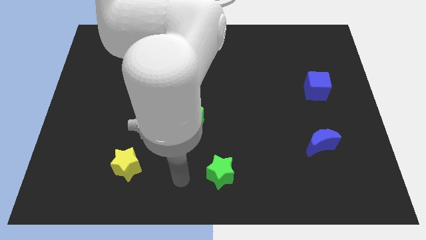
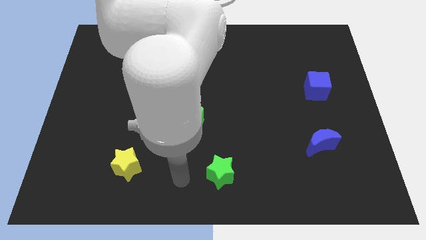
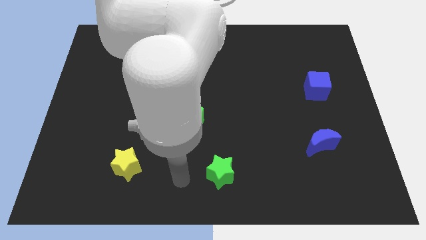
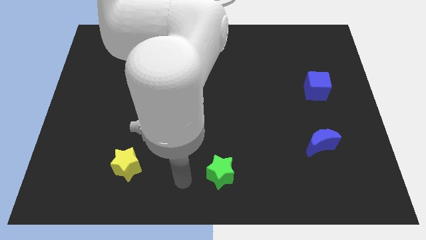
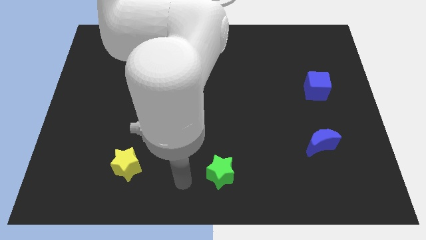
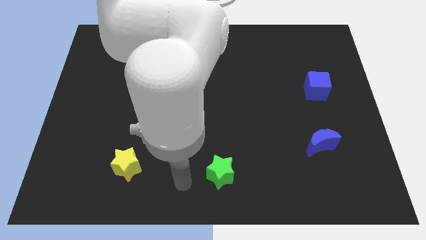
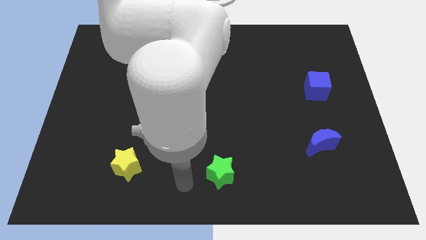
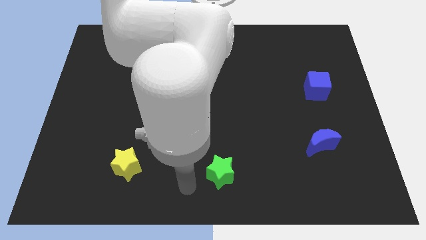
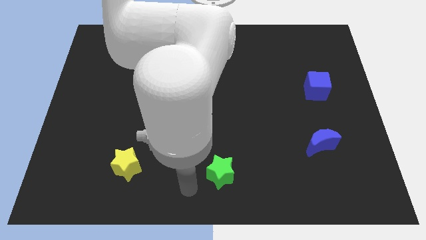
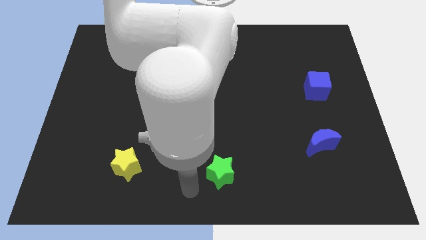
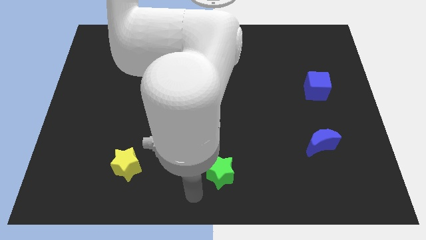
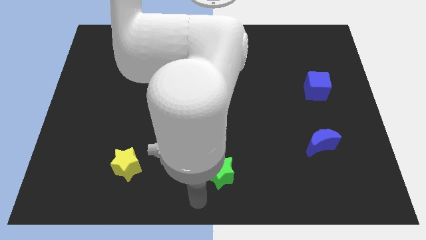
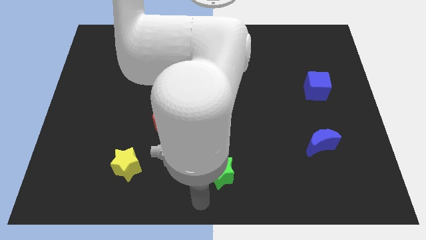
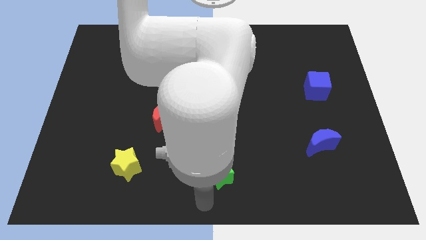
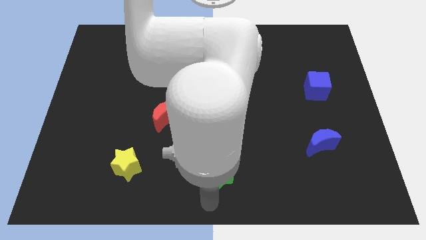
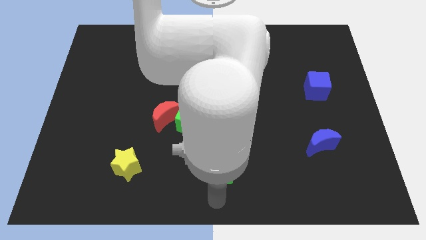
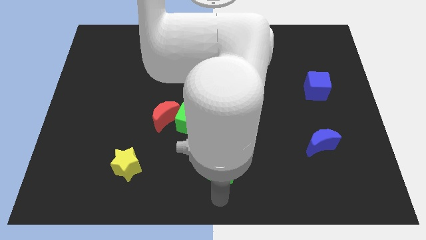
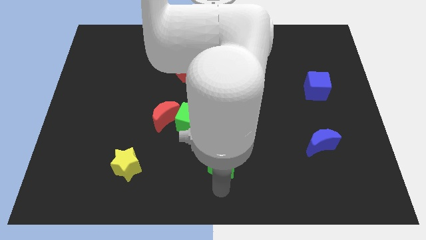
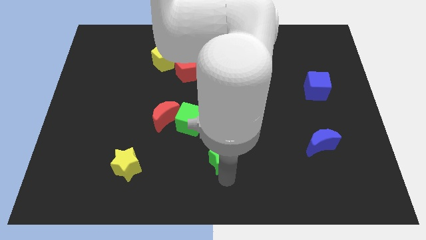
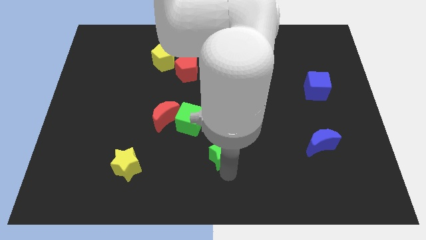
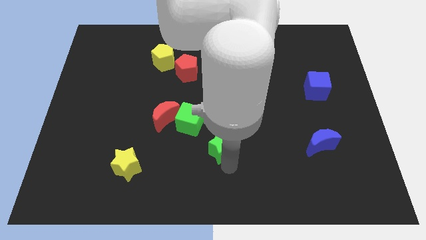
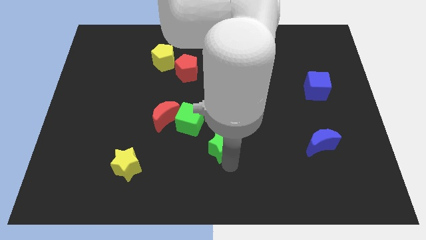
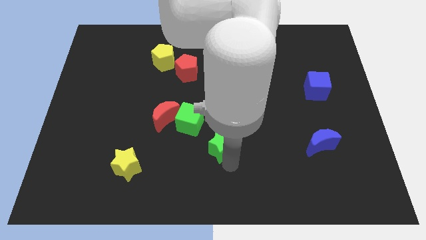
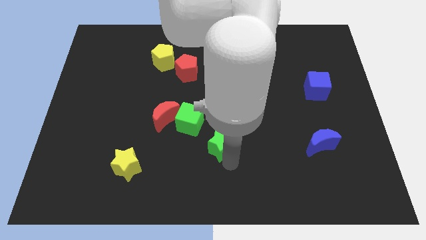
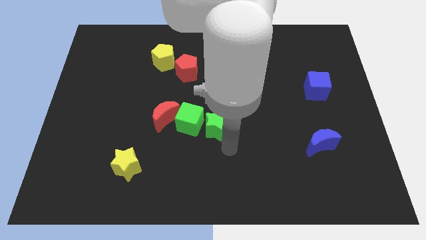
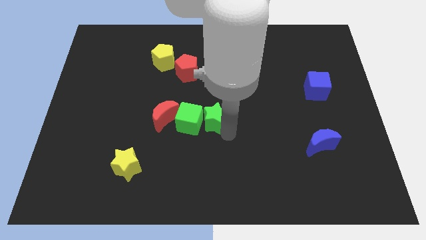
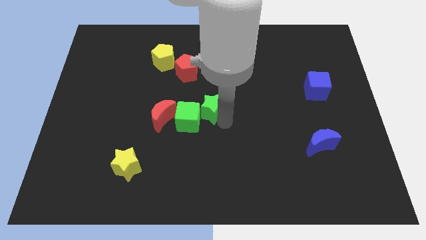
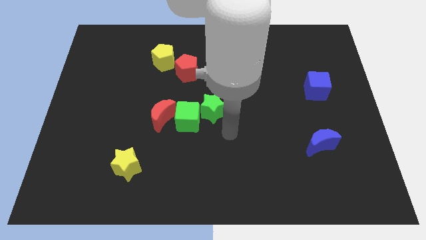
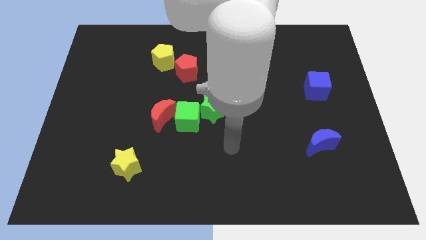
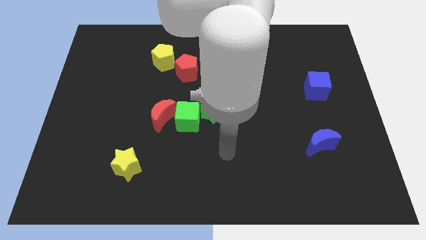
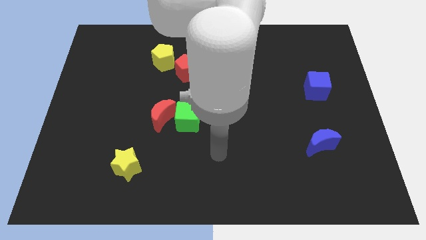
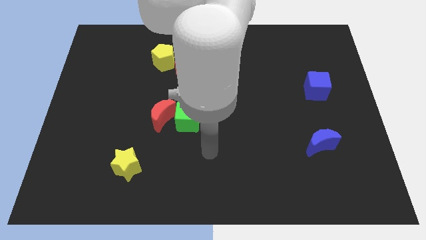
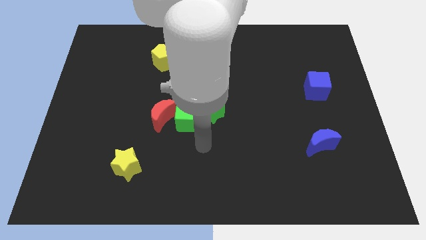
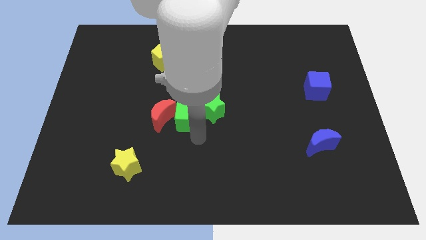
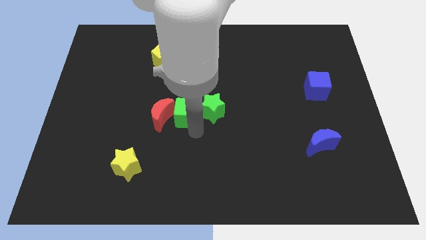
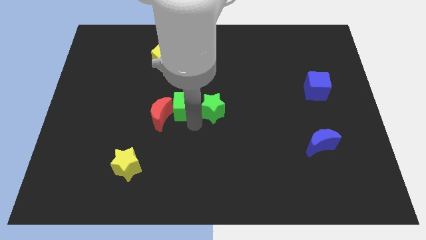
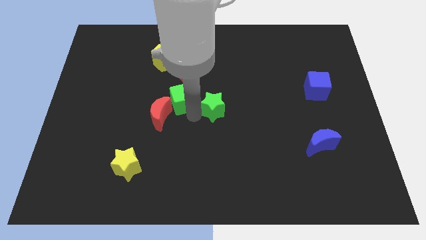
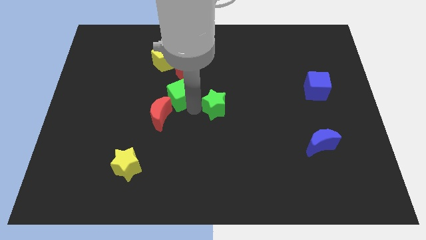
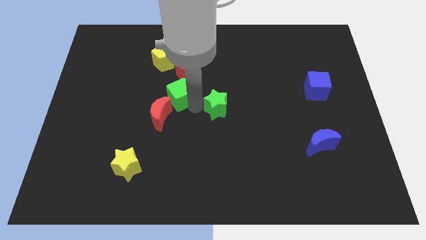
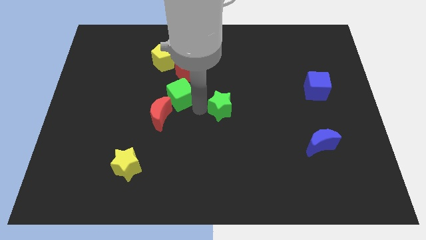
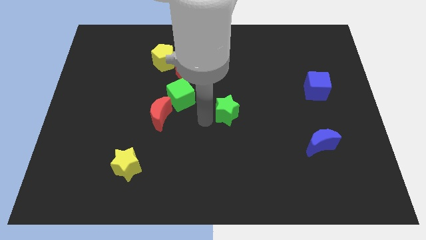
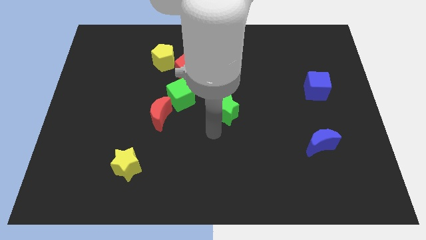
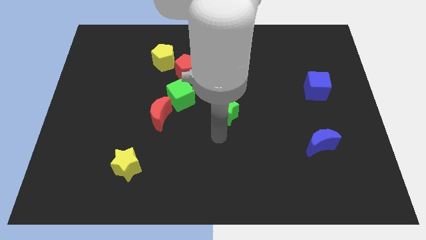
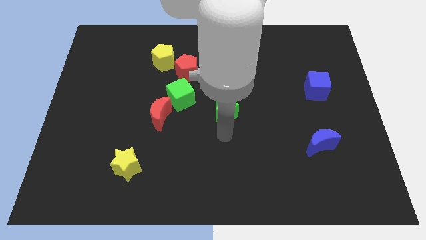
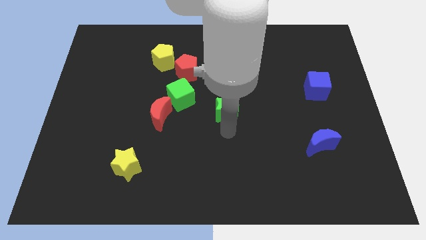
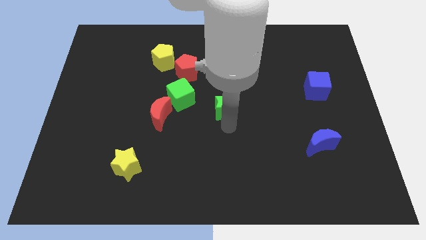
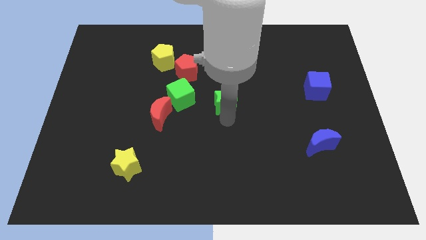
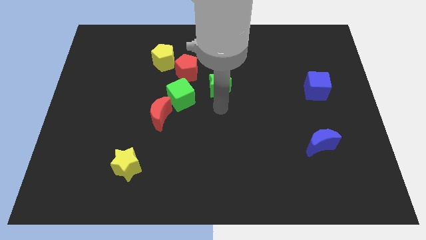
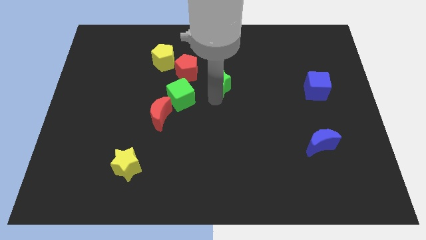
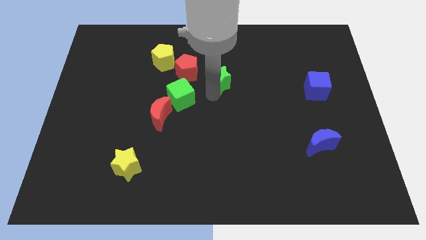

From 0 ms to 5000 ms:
push the green star towards the top center of board

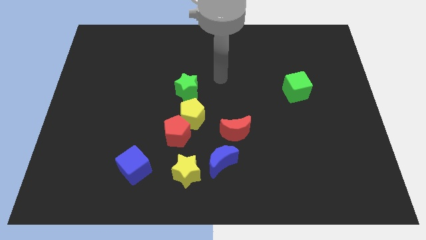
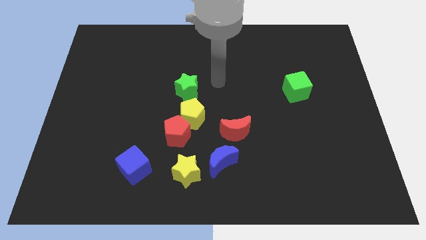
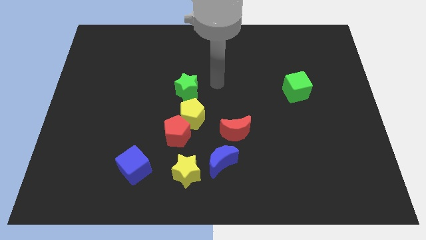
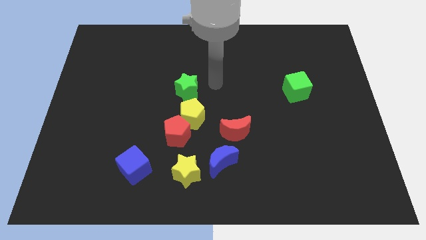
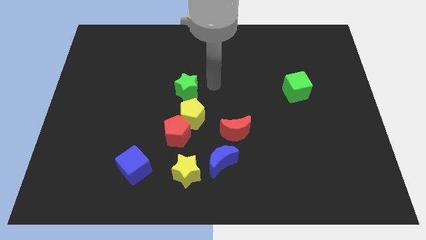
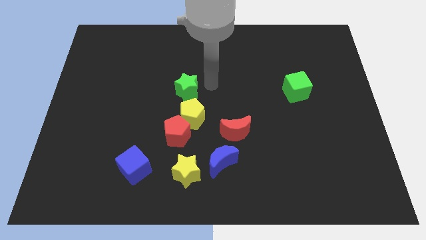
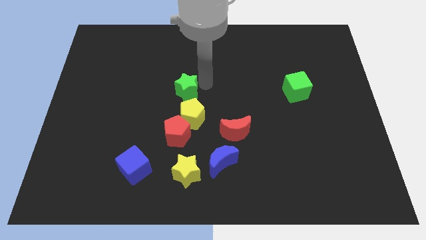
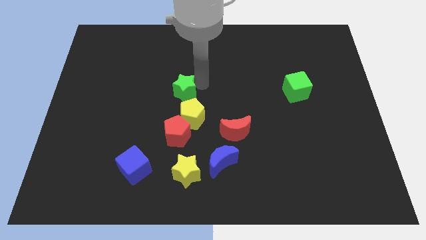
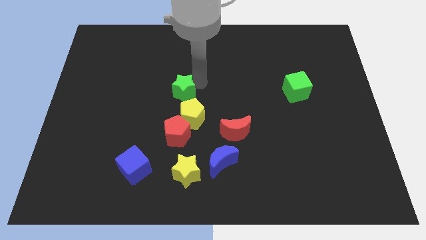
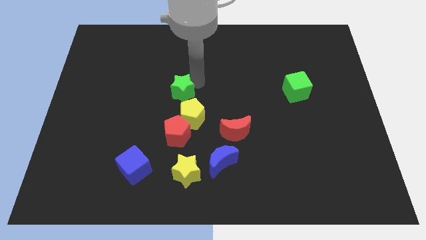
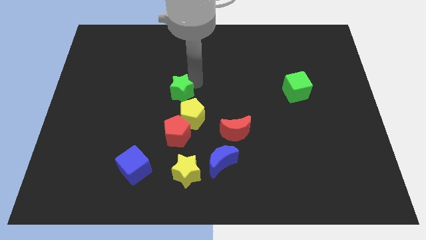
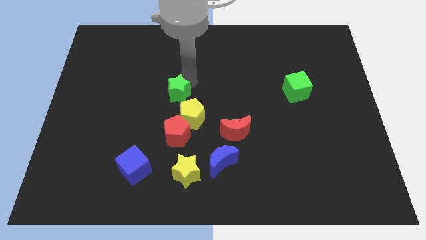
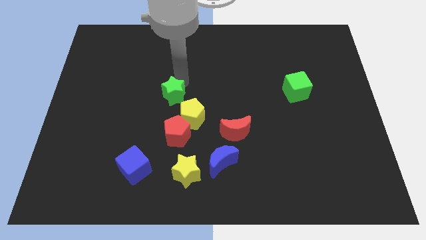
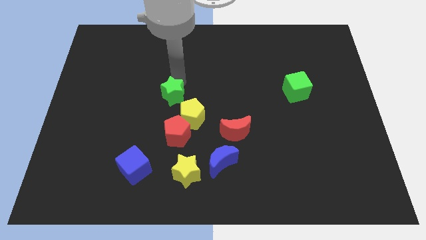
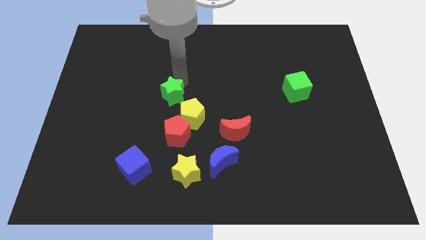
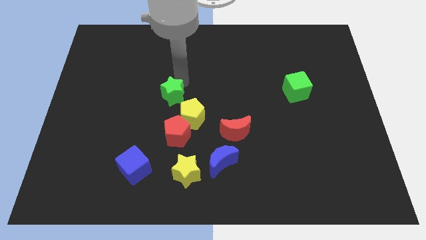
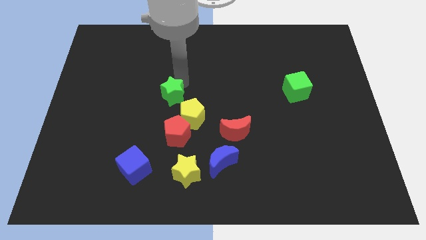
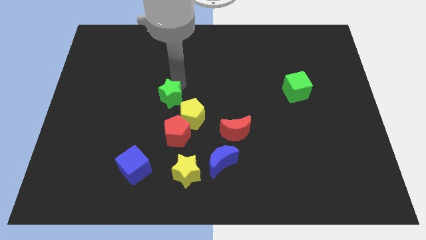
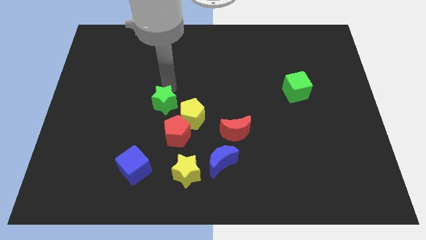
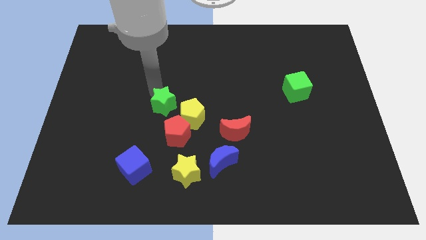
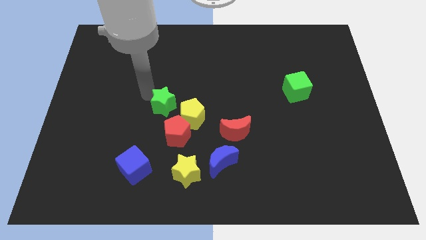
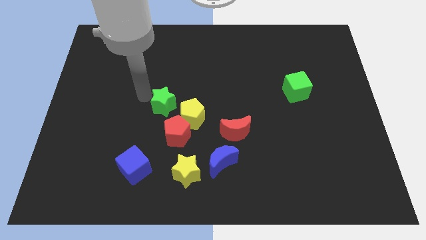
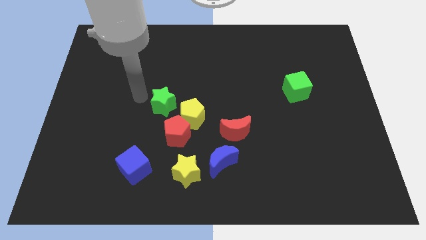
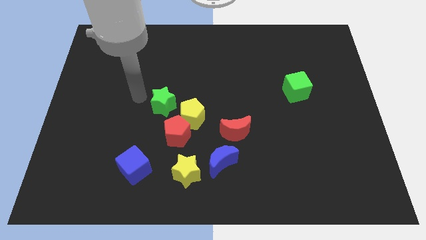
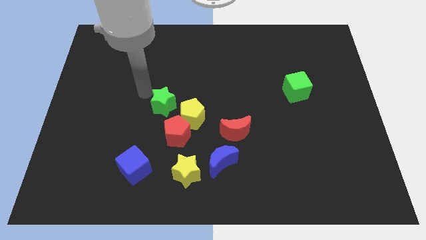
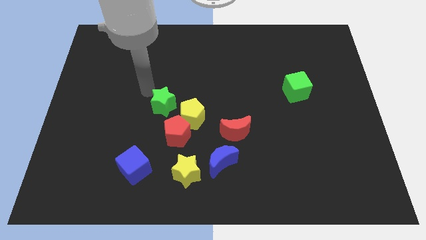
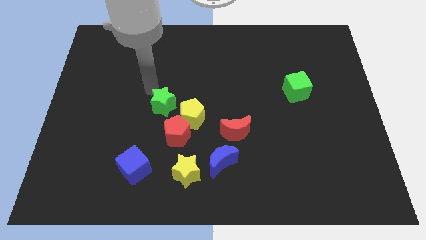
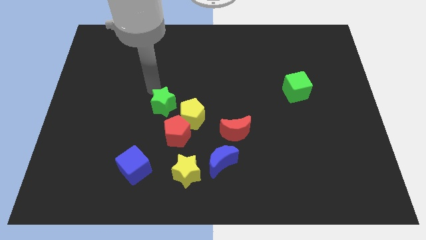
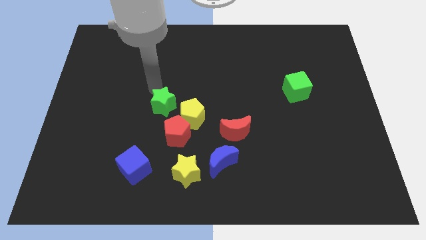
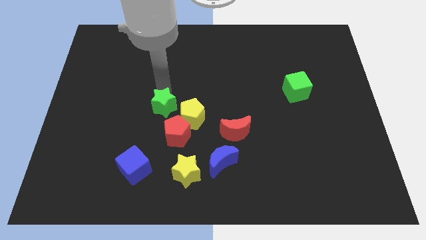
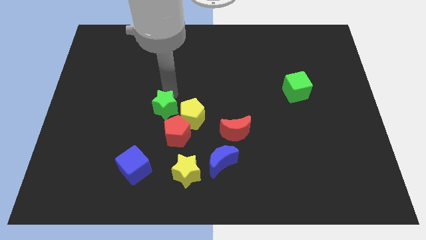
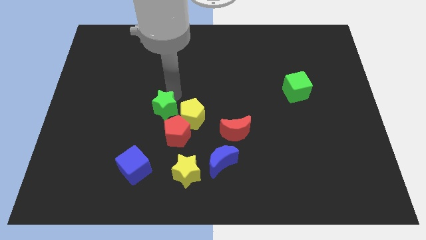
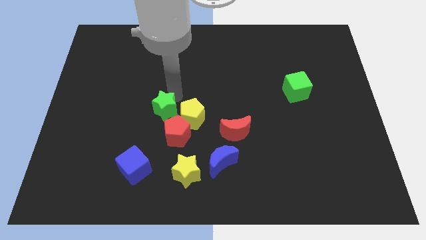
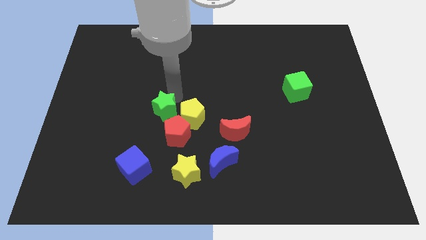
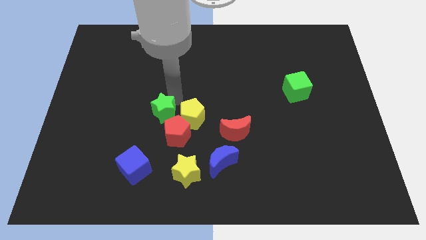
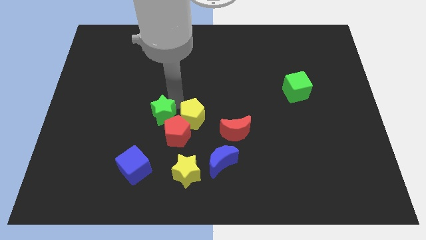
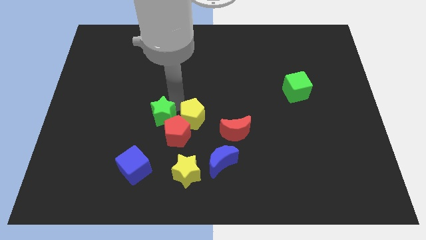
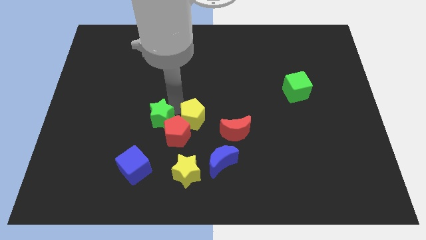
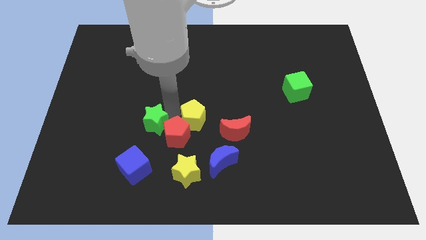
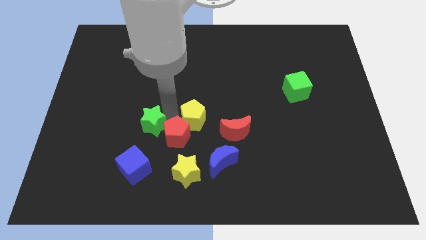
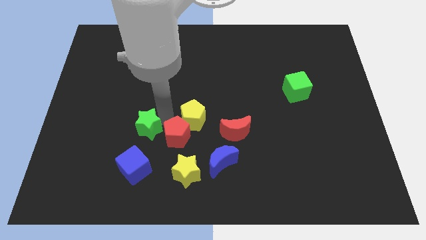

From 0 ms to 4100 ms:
place the green star to the left side of yellow pentagon
